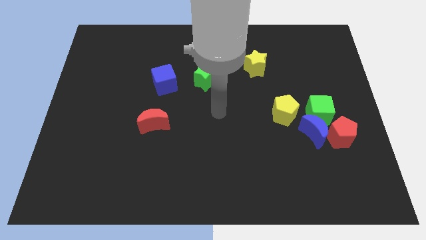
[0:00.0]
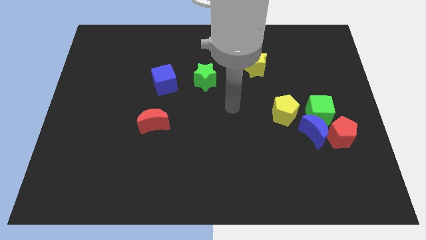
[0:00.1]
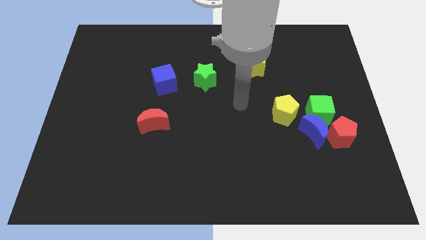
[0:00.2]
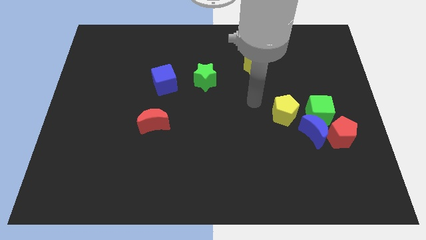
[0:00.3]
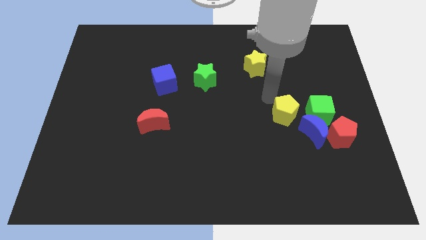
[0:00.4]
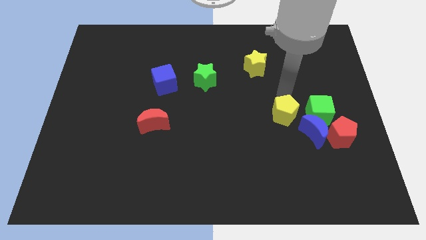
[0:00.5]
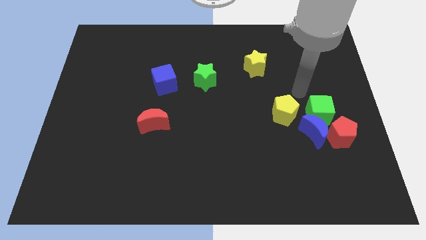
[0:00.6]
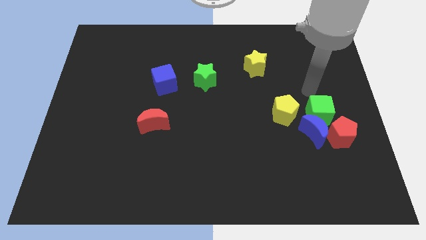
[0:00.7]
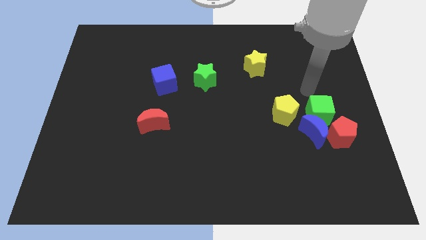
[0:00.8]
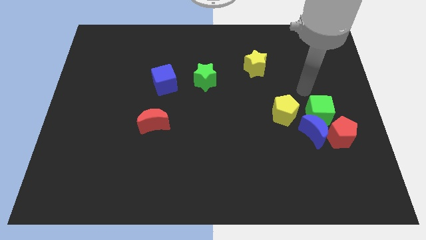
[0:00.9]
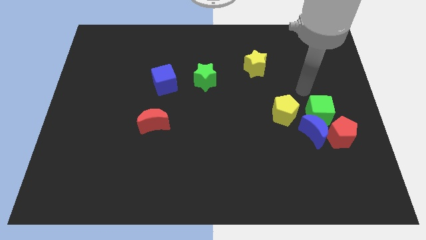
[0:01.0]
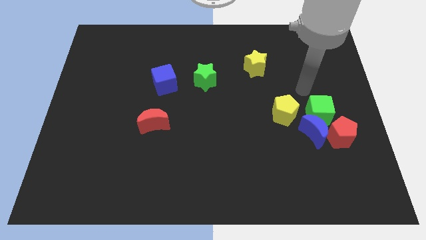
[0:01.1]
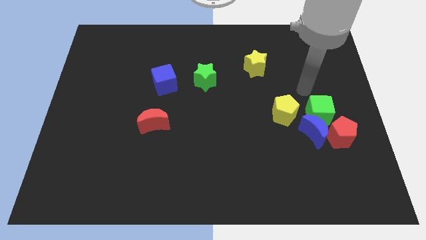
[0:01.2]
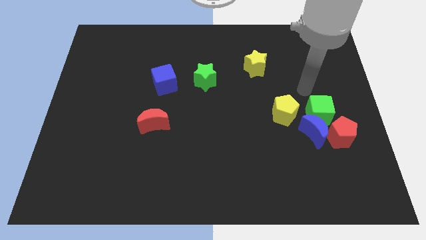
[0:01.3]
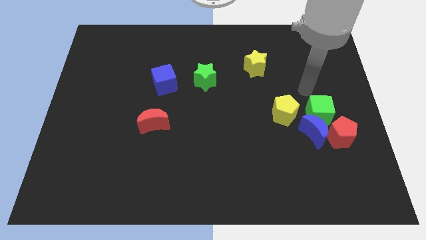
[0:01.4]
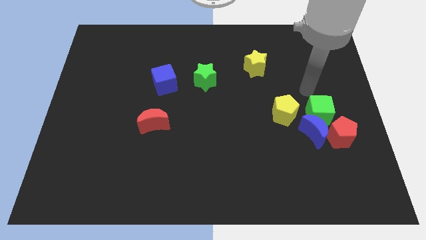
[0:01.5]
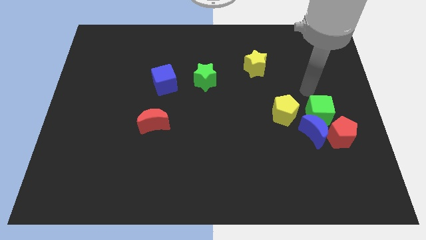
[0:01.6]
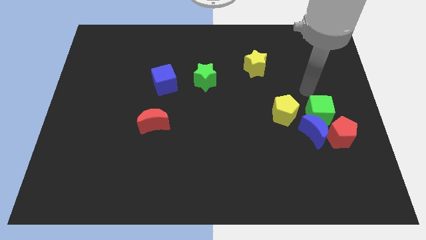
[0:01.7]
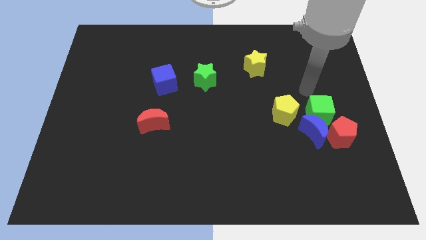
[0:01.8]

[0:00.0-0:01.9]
move your arm towards green cube

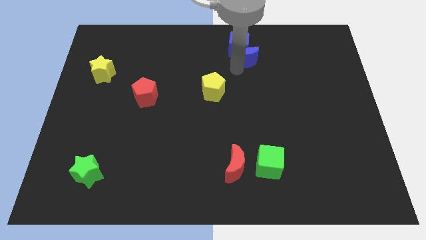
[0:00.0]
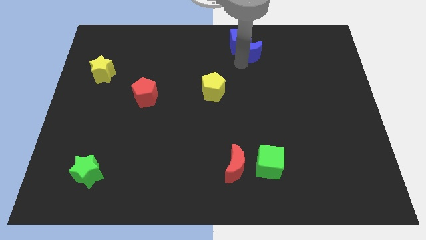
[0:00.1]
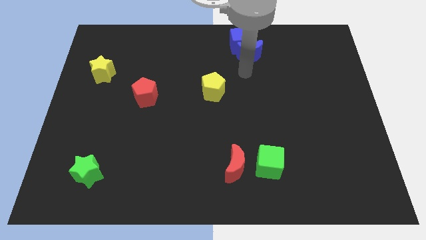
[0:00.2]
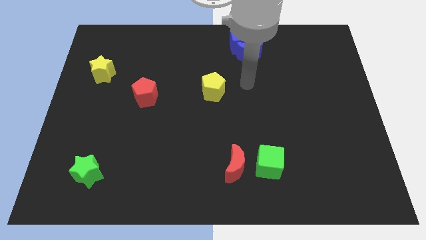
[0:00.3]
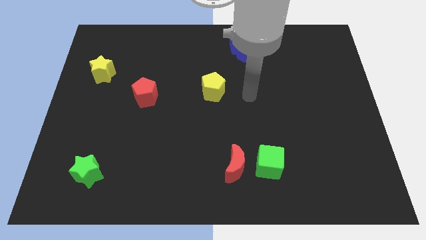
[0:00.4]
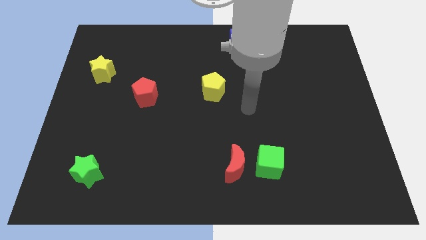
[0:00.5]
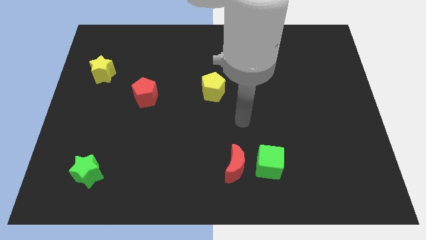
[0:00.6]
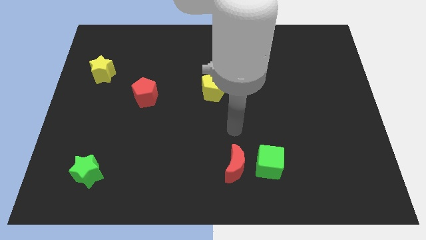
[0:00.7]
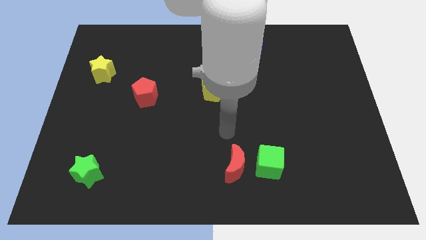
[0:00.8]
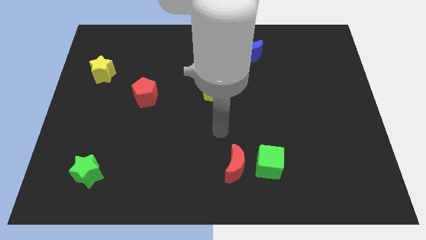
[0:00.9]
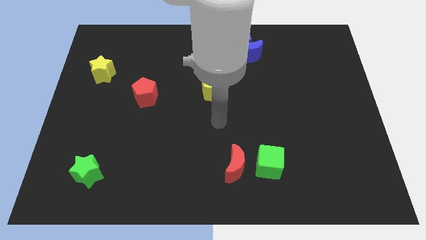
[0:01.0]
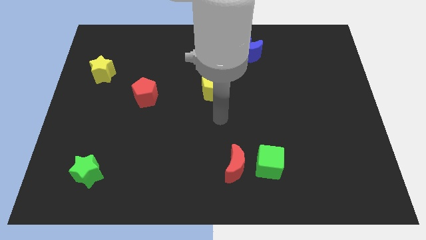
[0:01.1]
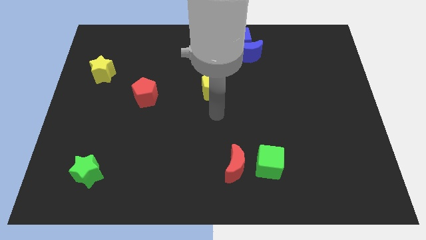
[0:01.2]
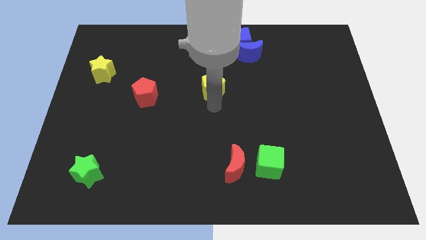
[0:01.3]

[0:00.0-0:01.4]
push the blue blocks to the top center

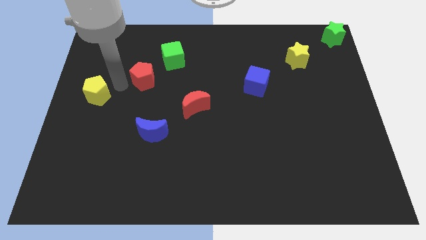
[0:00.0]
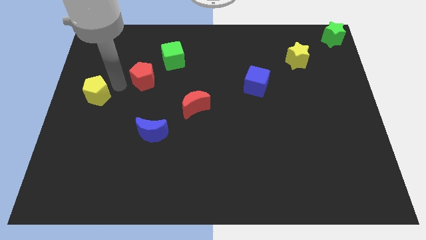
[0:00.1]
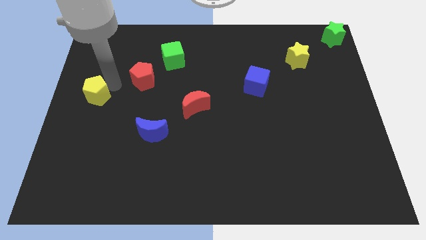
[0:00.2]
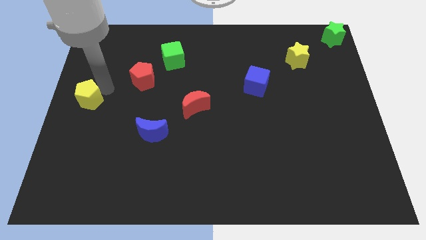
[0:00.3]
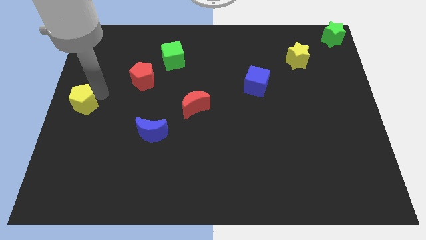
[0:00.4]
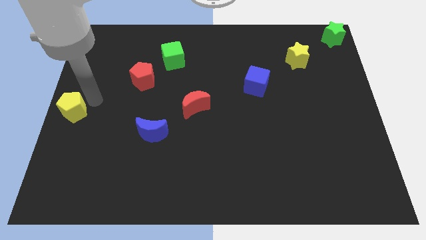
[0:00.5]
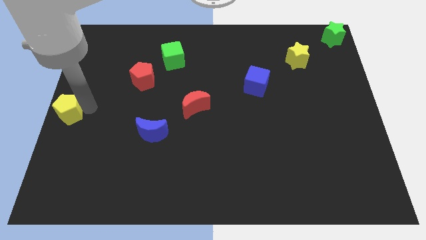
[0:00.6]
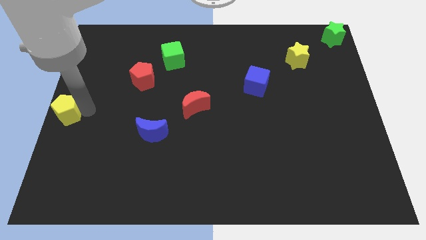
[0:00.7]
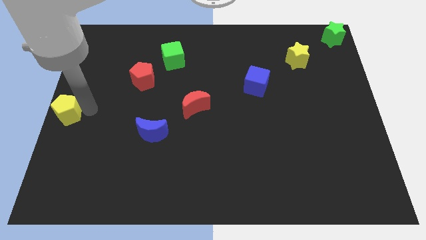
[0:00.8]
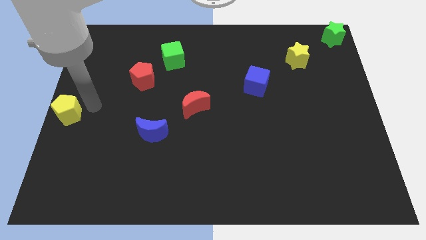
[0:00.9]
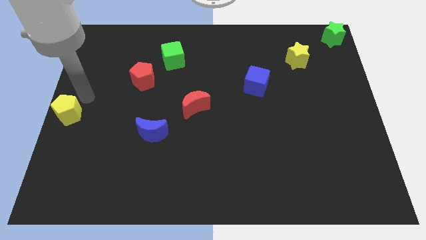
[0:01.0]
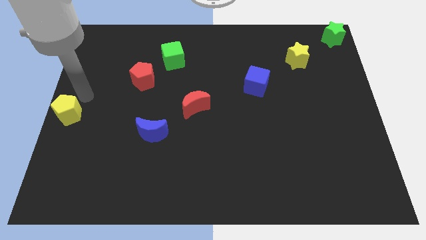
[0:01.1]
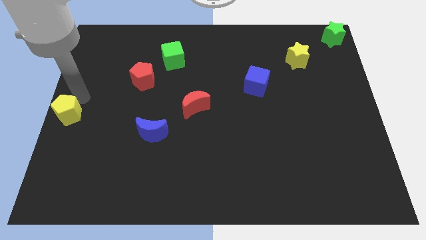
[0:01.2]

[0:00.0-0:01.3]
slide the yellow pentagon to the left center of the board

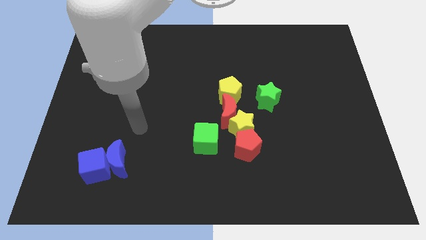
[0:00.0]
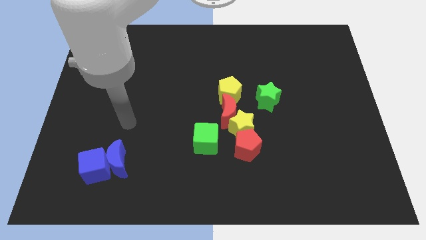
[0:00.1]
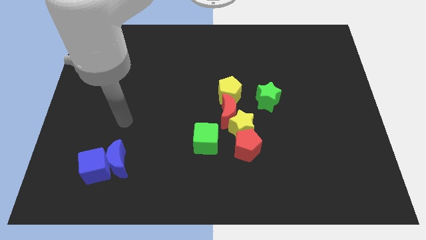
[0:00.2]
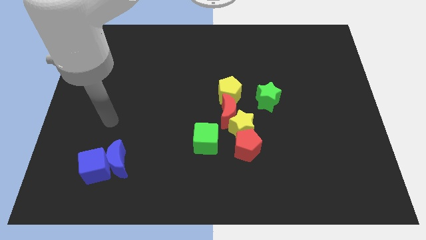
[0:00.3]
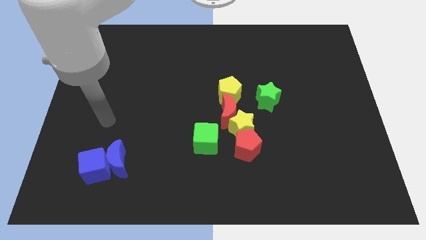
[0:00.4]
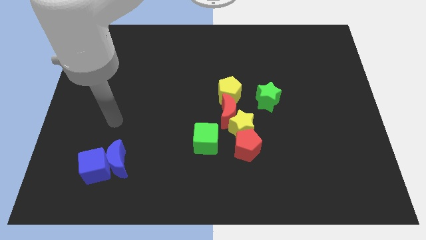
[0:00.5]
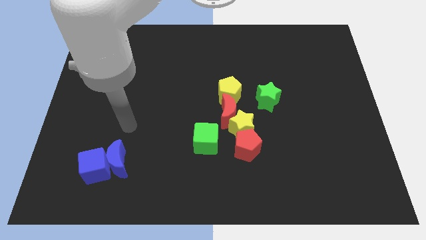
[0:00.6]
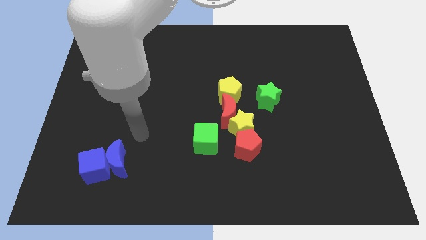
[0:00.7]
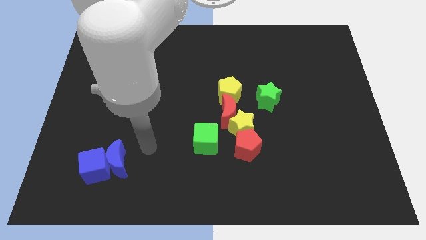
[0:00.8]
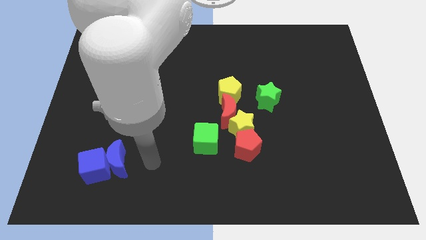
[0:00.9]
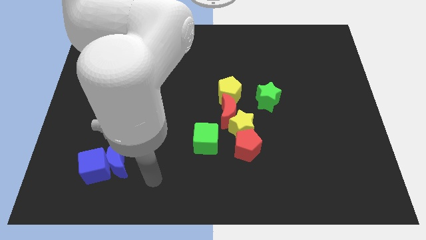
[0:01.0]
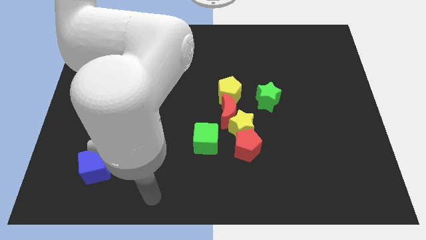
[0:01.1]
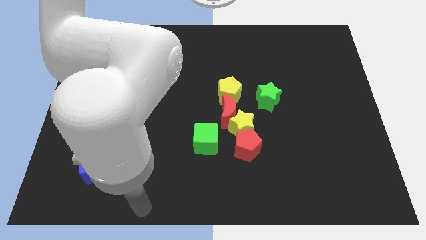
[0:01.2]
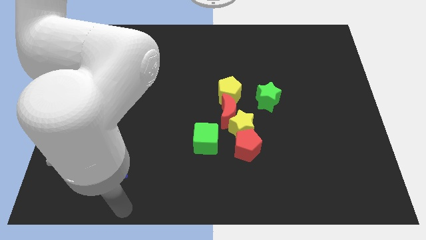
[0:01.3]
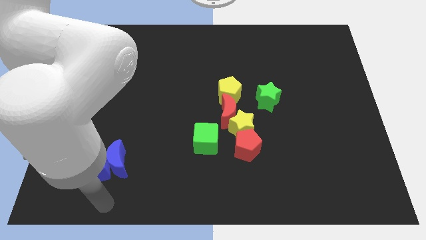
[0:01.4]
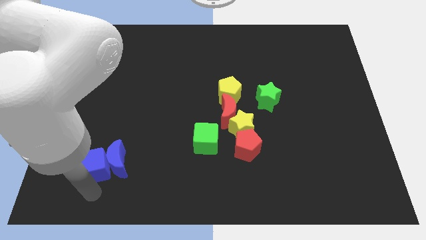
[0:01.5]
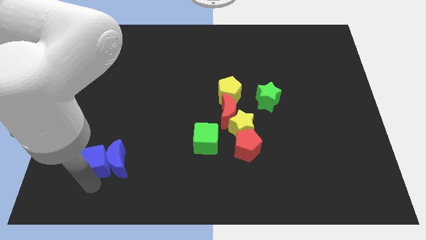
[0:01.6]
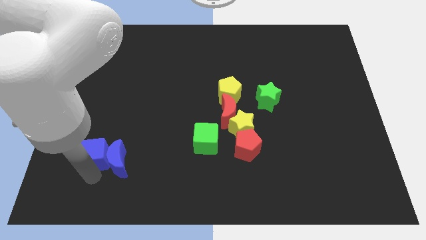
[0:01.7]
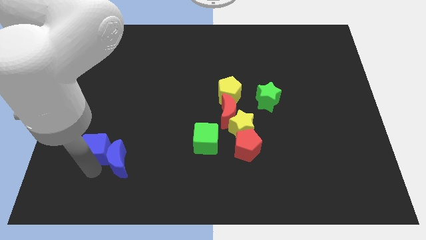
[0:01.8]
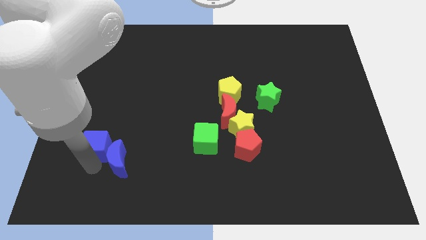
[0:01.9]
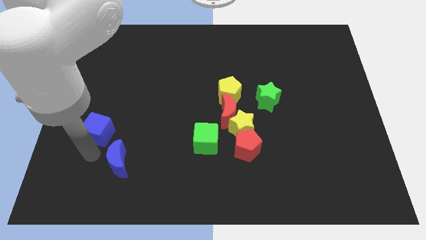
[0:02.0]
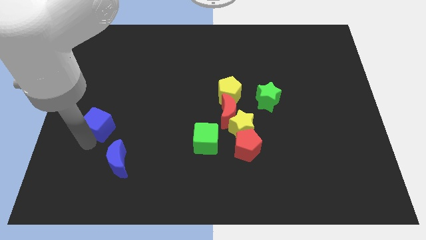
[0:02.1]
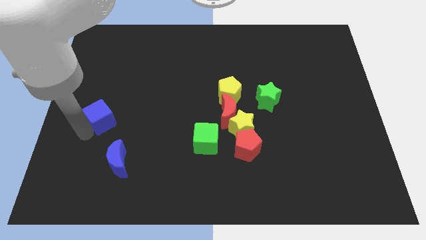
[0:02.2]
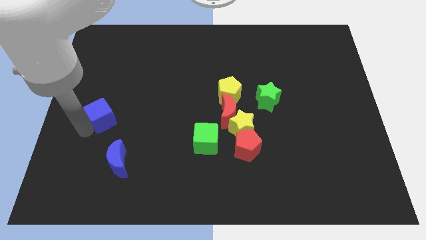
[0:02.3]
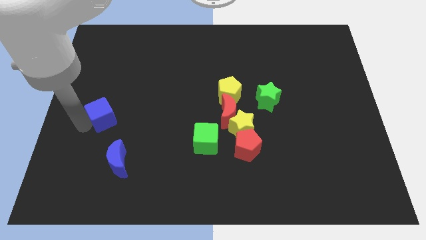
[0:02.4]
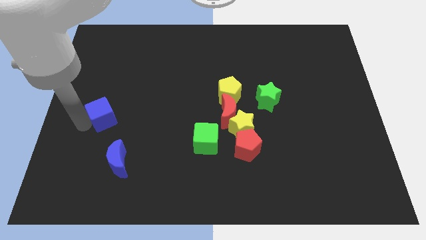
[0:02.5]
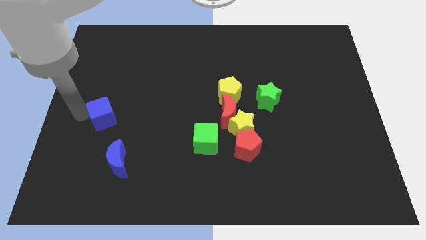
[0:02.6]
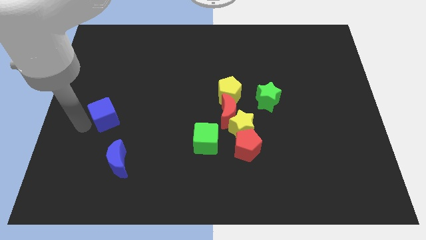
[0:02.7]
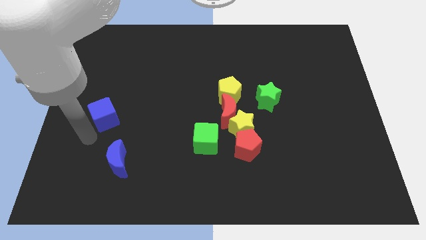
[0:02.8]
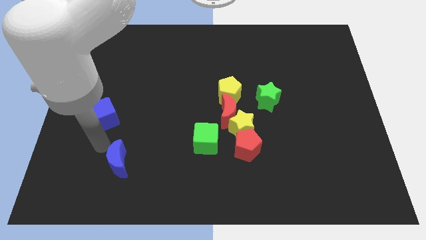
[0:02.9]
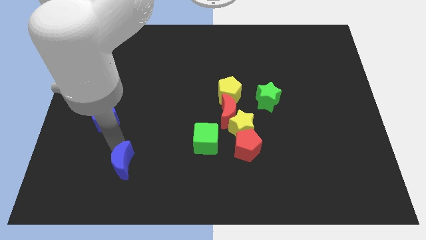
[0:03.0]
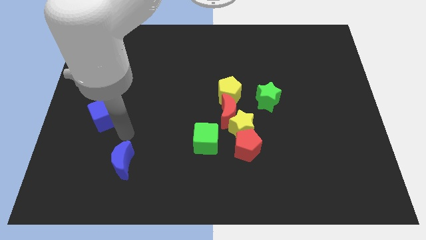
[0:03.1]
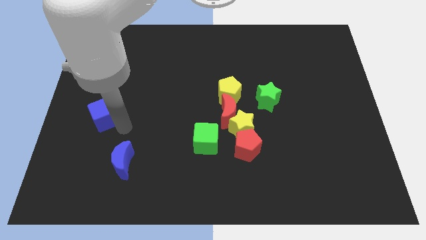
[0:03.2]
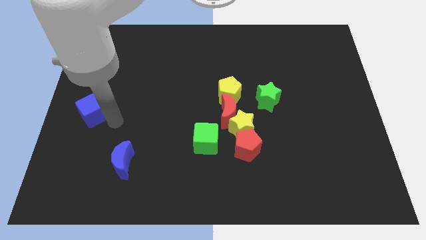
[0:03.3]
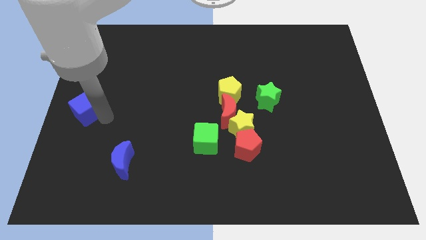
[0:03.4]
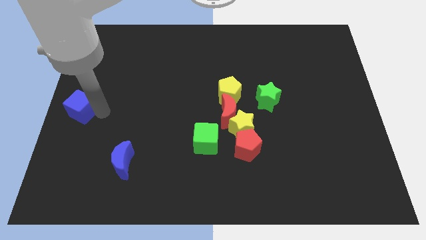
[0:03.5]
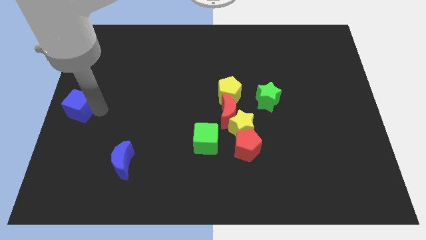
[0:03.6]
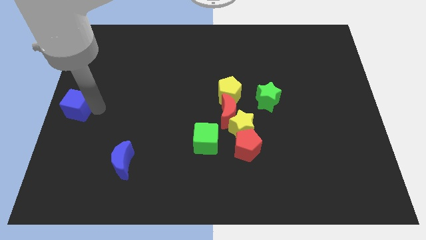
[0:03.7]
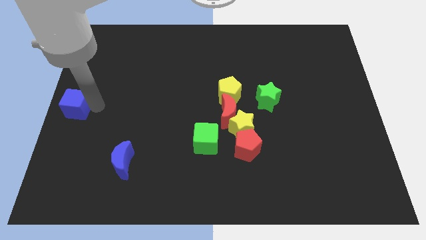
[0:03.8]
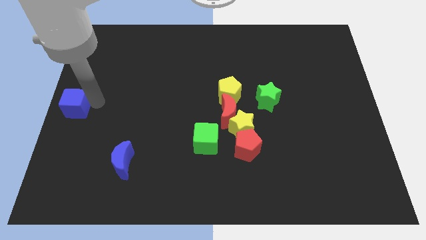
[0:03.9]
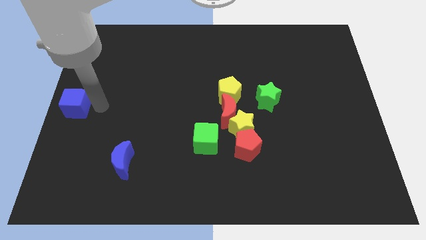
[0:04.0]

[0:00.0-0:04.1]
place the blue cube at the left center of the board

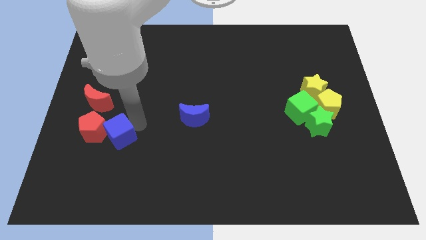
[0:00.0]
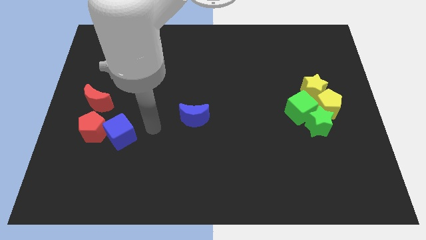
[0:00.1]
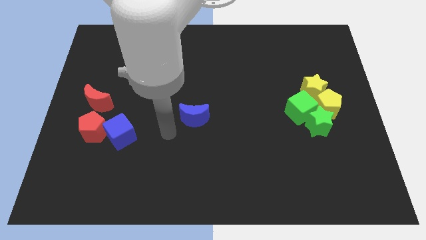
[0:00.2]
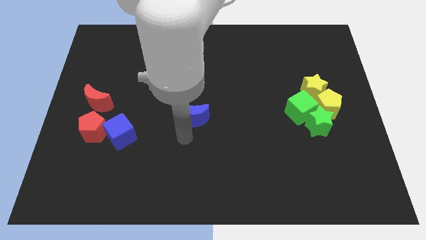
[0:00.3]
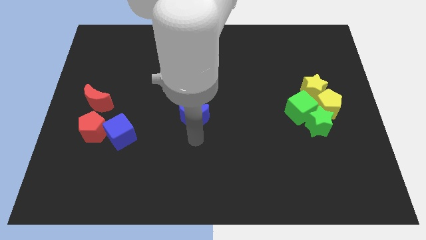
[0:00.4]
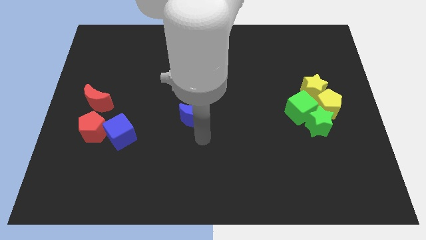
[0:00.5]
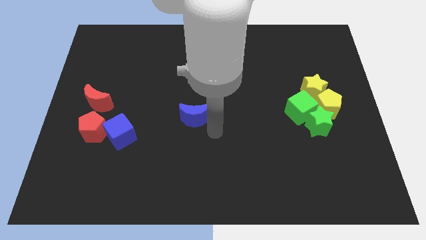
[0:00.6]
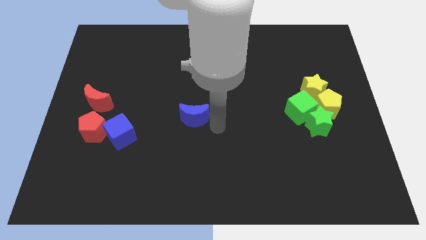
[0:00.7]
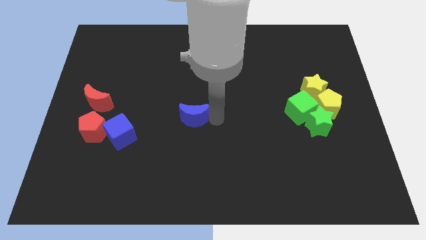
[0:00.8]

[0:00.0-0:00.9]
move your ram right to the blue crescent
